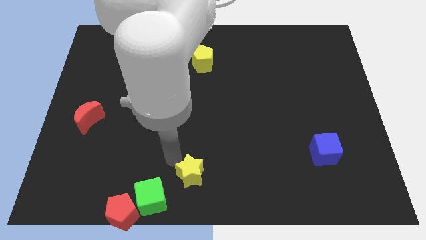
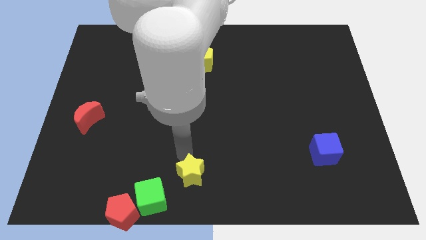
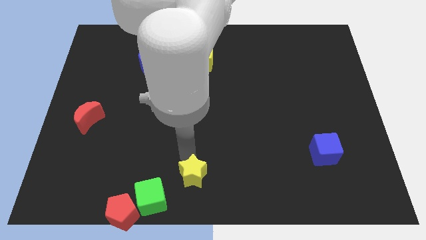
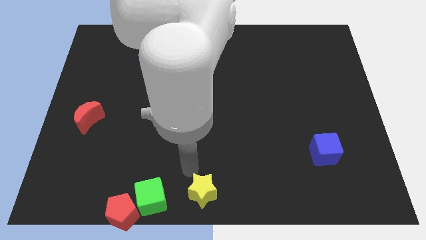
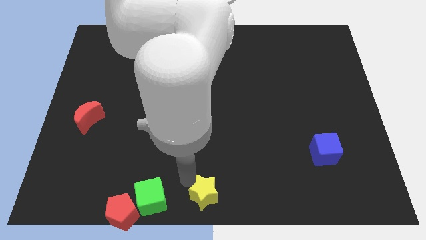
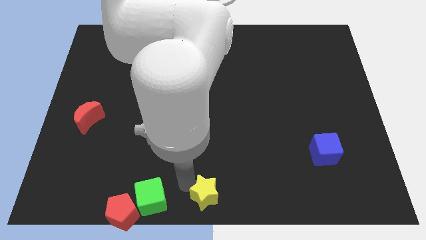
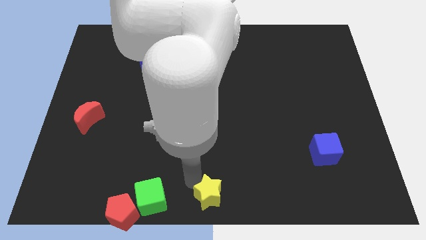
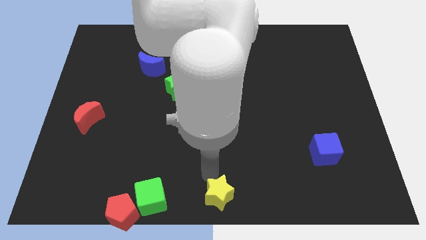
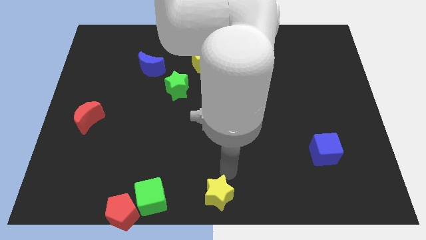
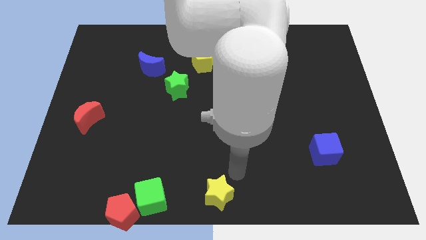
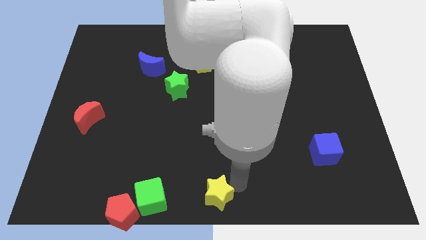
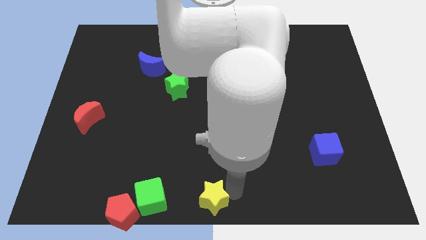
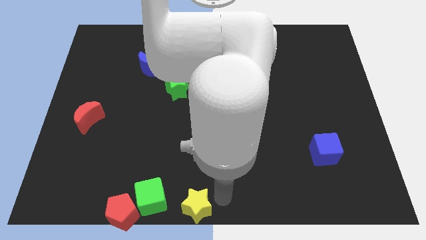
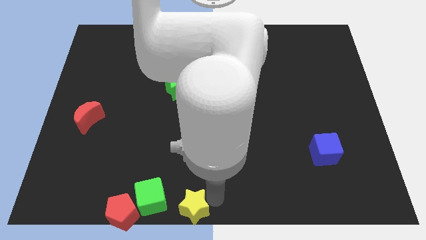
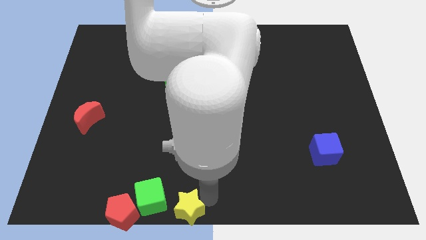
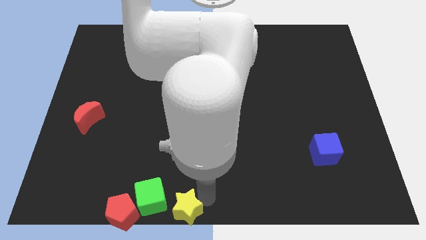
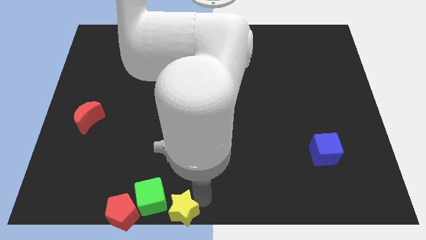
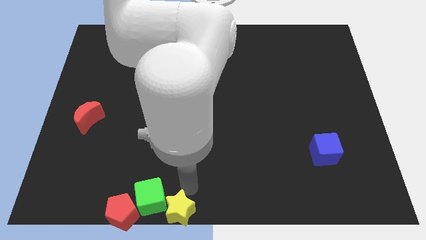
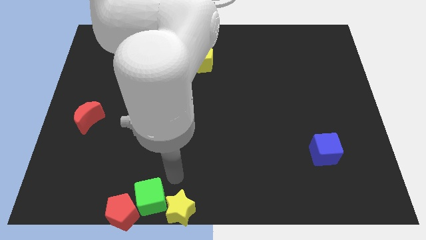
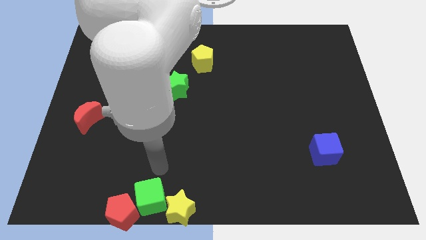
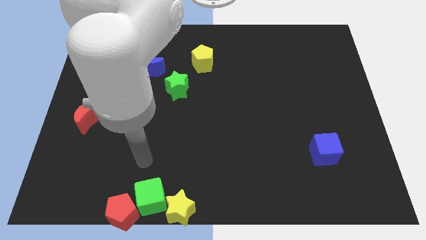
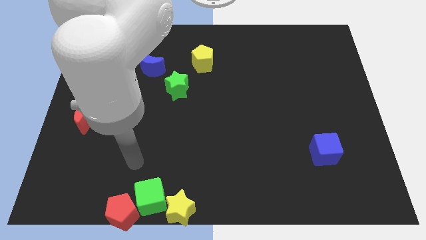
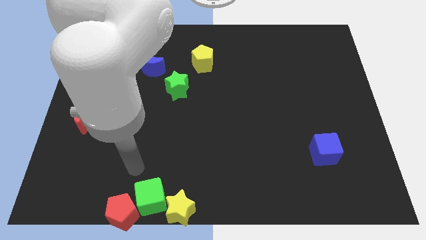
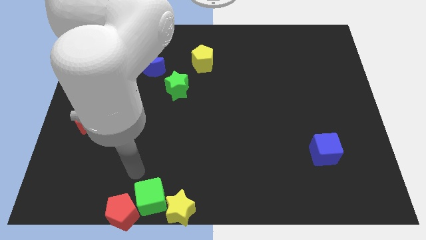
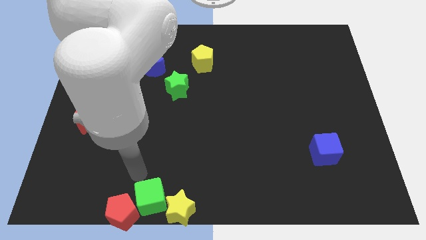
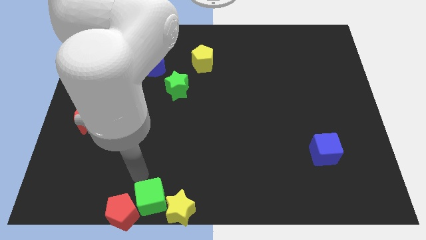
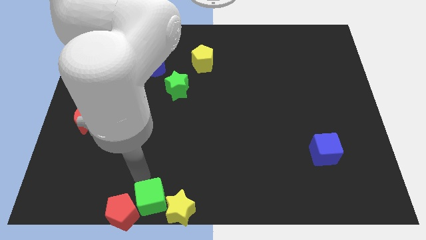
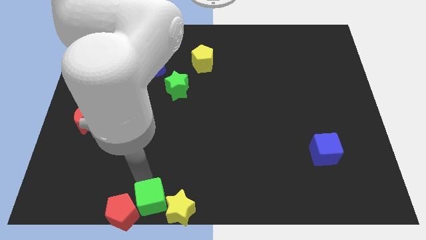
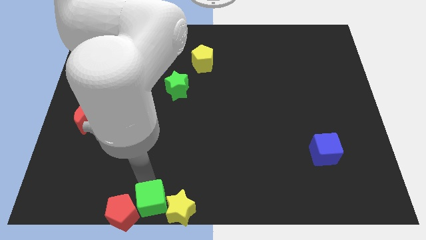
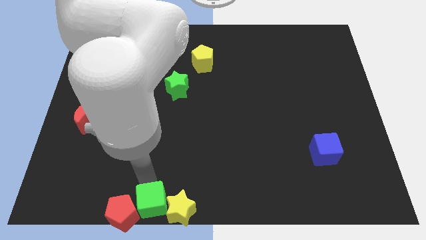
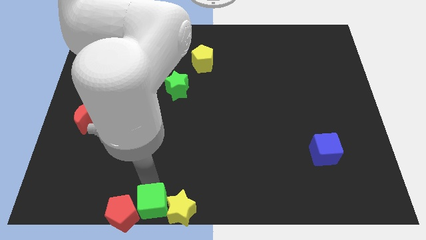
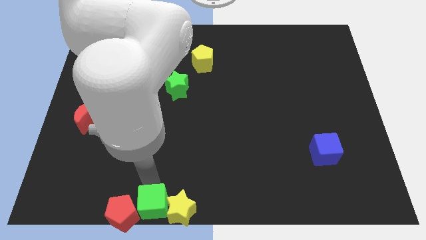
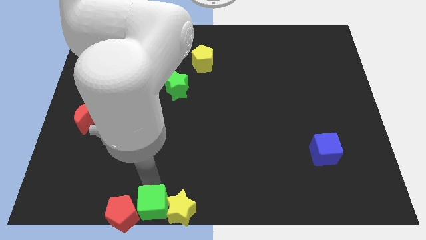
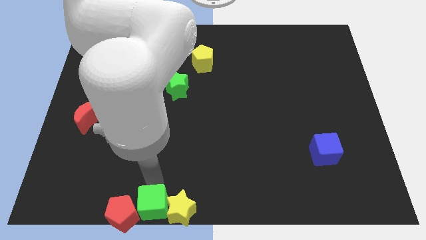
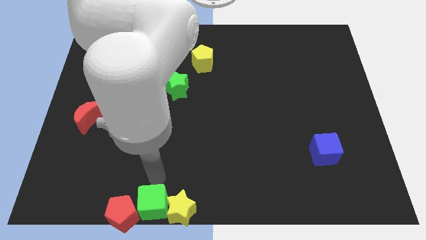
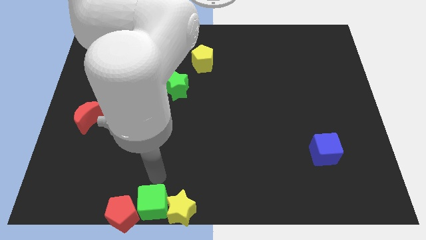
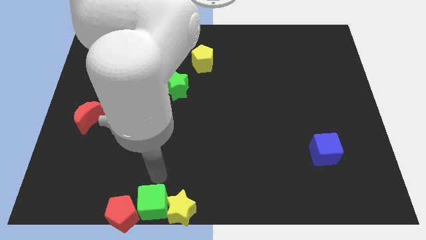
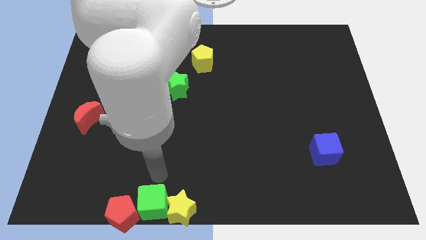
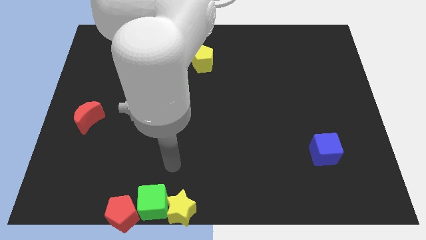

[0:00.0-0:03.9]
put the green cube and yellow star to the right side of the red pentagon

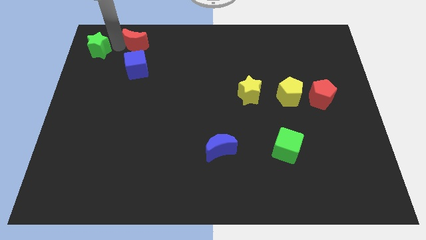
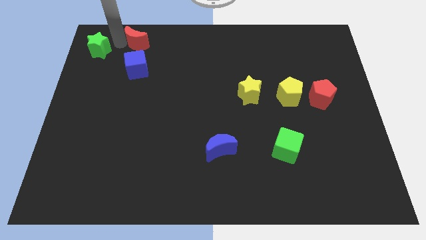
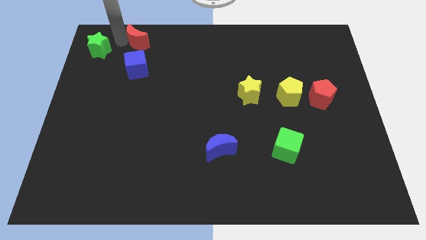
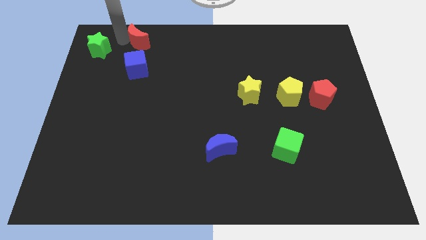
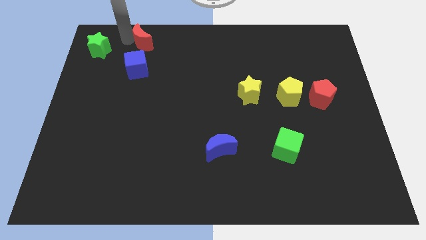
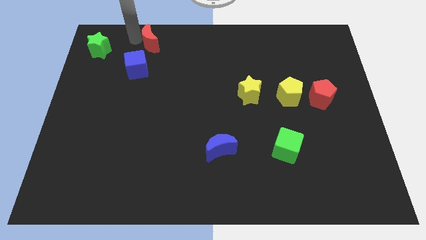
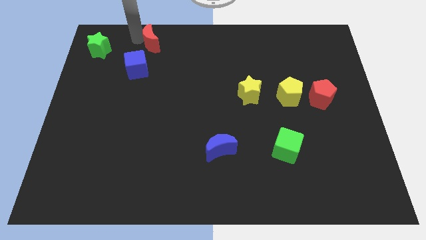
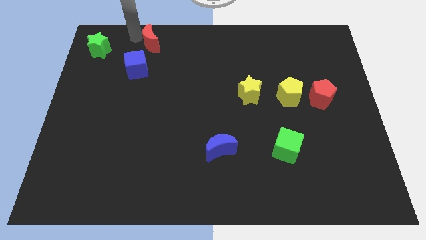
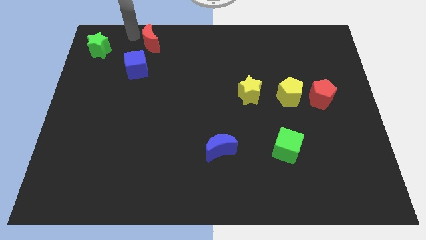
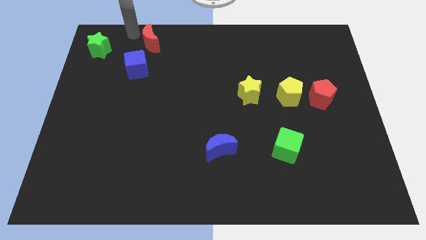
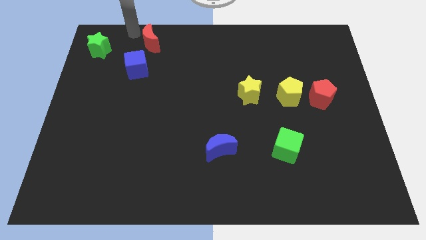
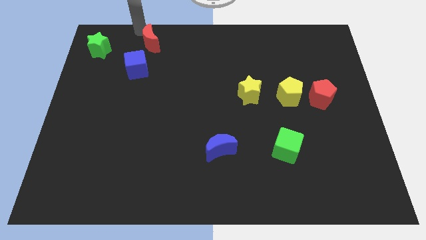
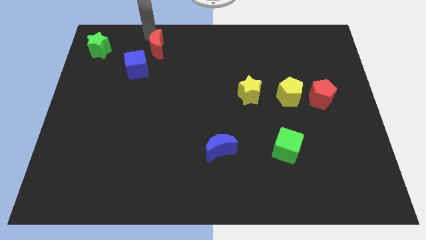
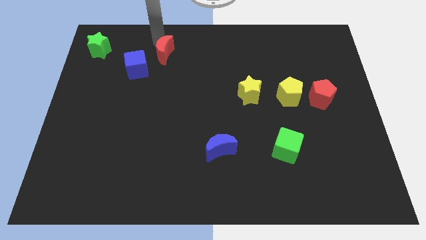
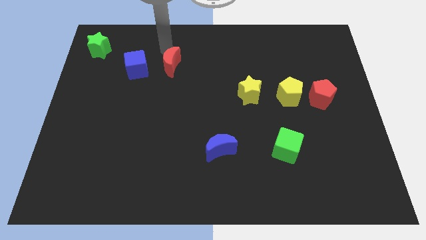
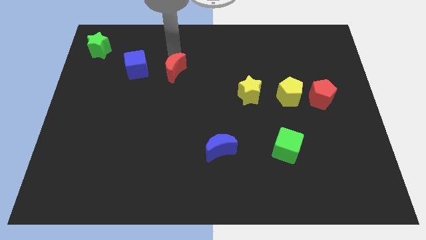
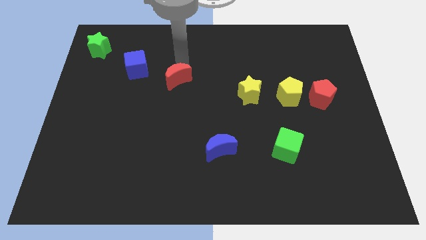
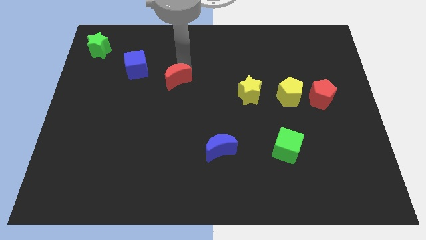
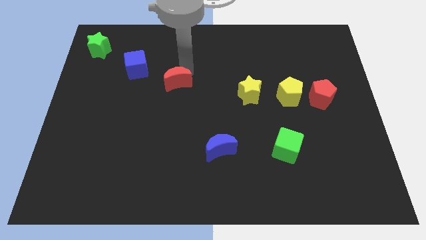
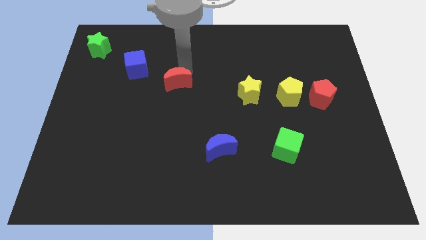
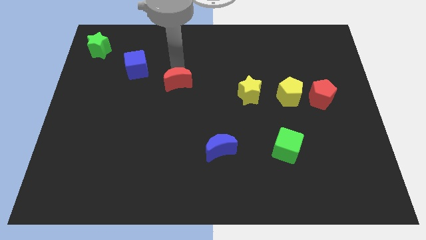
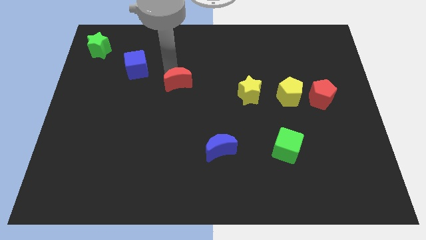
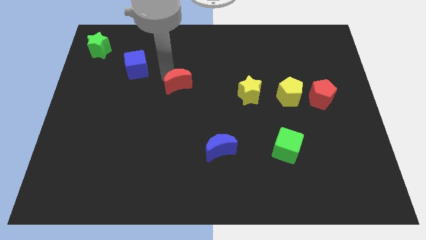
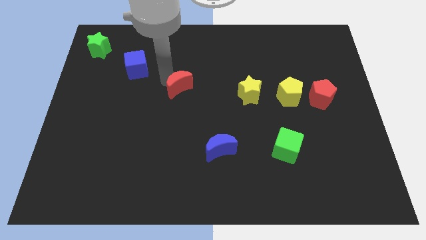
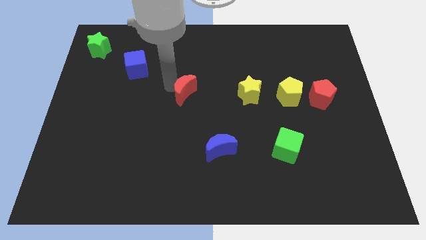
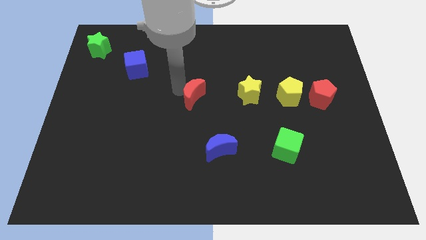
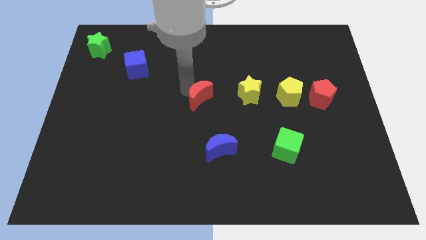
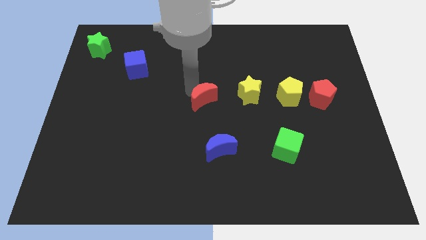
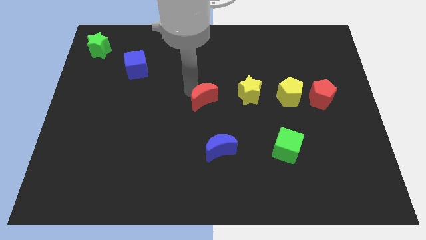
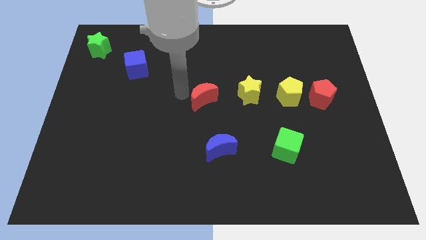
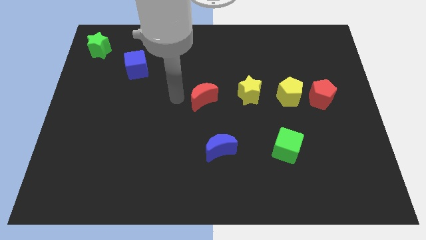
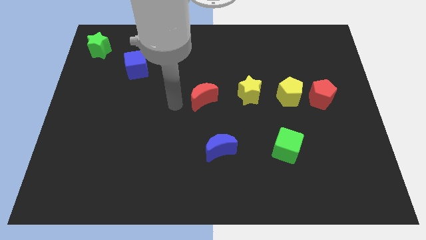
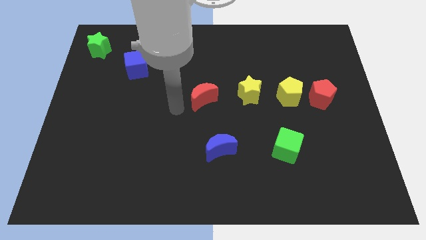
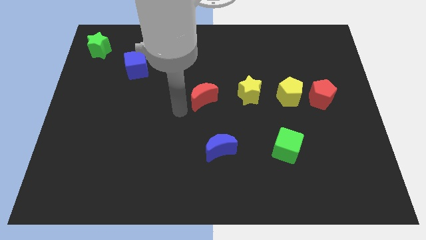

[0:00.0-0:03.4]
separate red crescent from blue cube

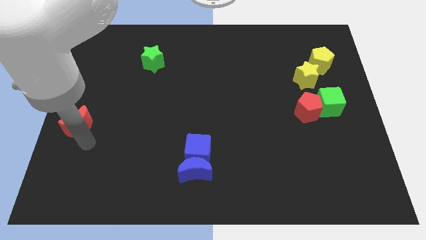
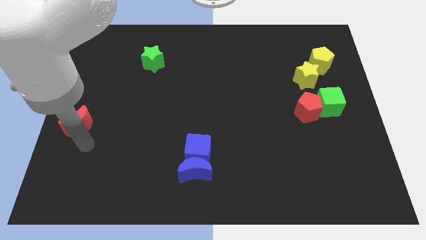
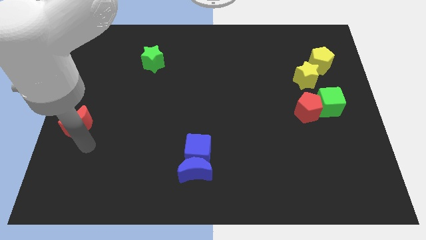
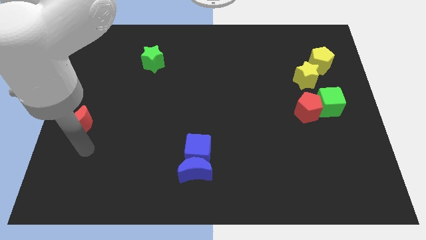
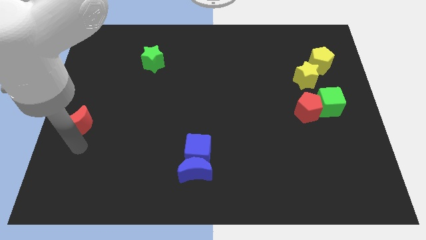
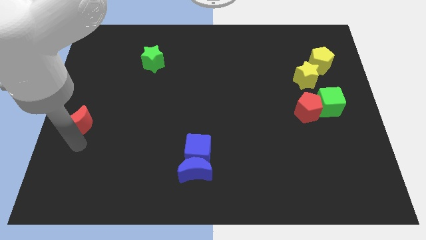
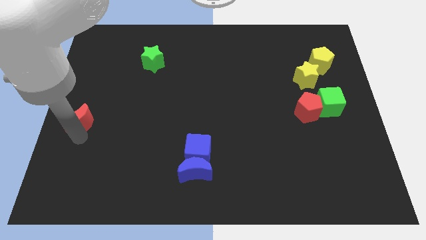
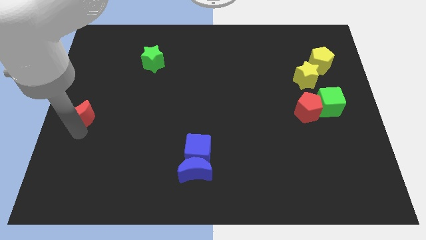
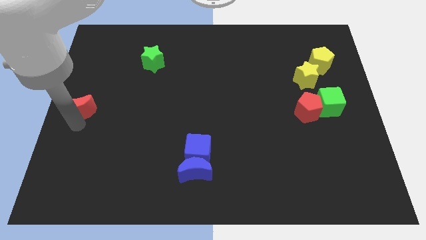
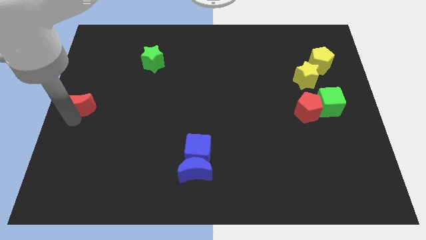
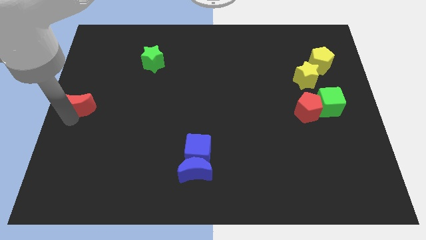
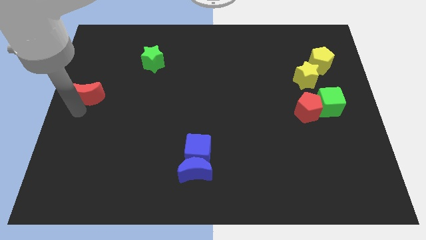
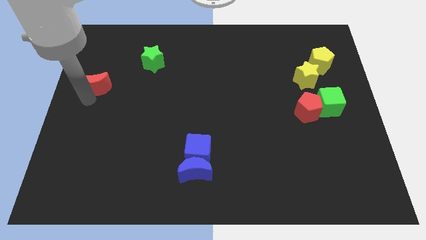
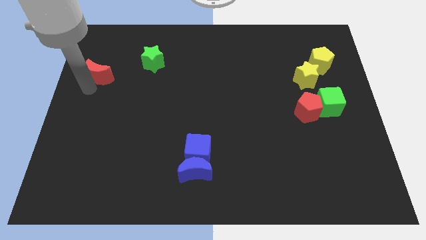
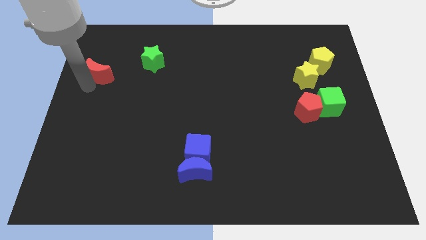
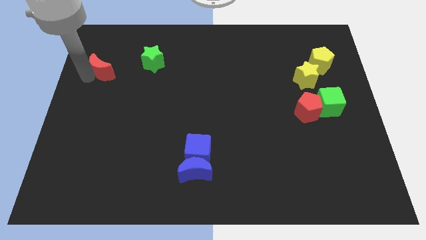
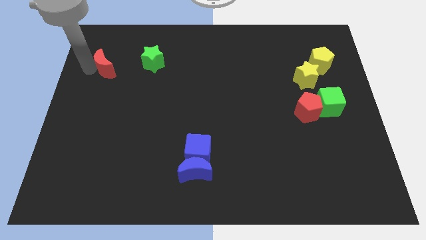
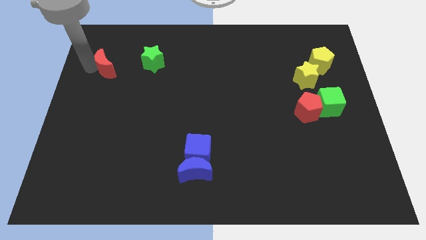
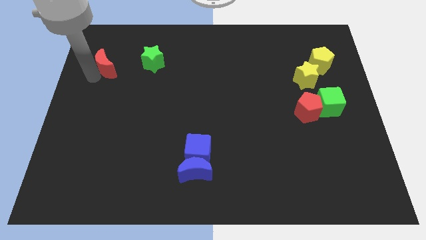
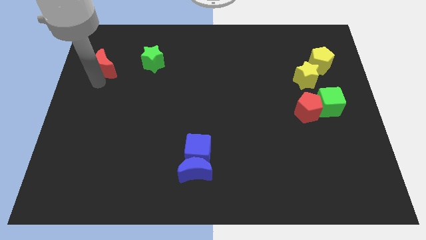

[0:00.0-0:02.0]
drag the red crescent to the left side of the green star
